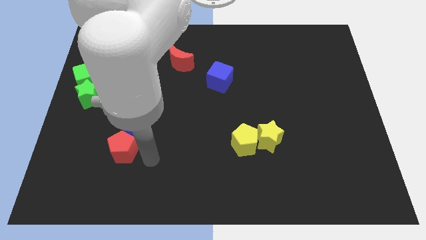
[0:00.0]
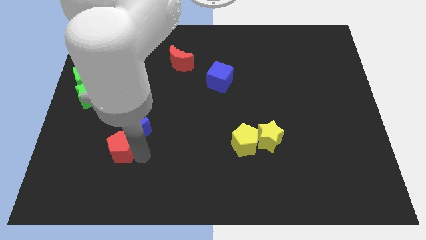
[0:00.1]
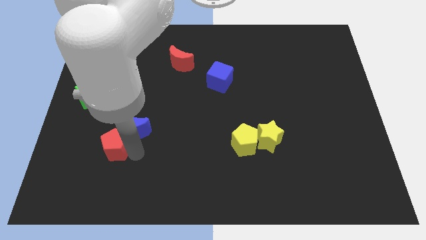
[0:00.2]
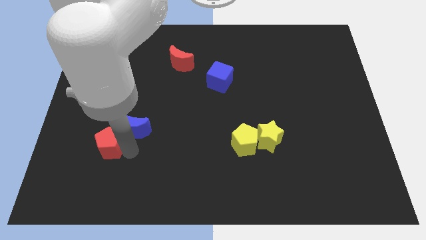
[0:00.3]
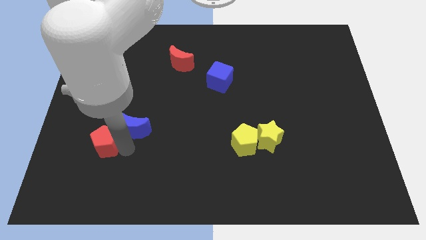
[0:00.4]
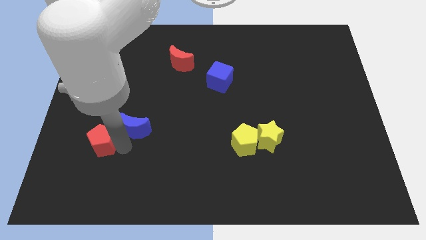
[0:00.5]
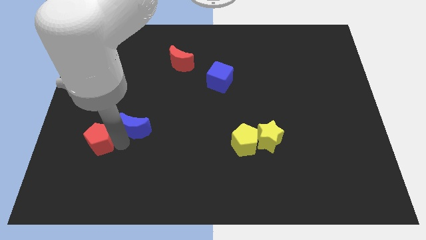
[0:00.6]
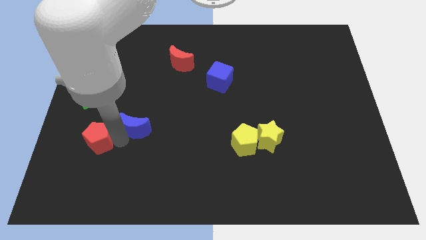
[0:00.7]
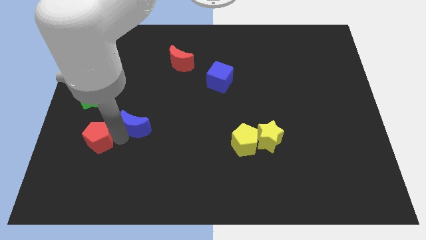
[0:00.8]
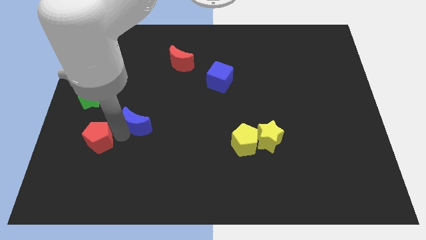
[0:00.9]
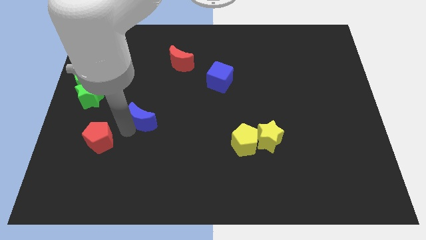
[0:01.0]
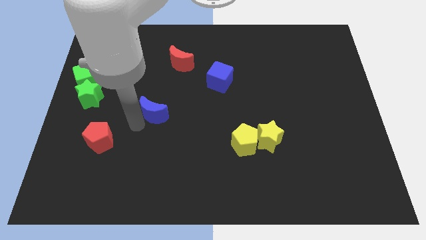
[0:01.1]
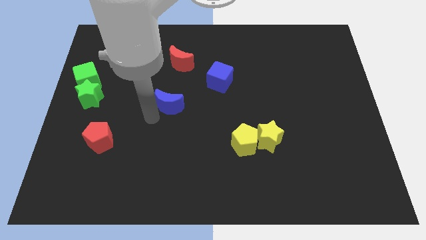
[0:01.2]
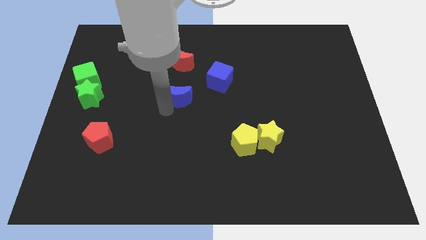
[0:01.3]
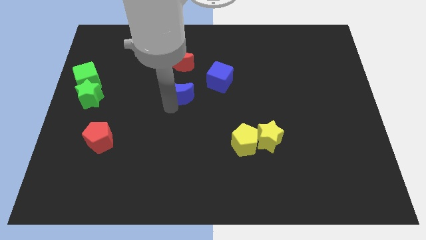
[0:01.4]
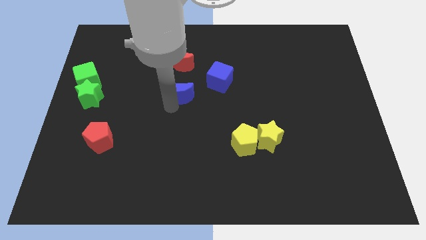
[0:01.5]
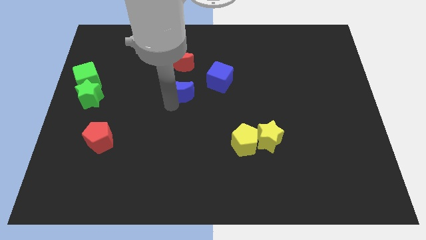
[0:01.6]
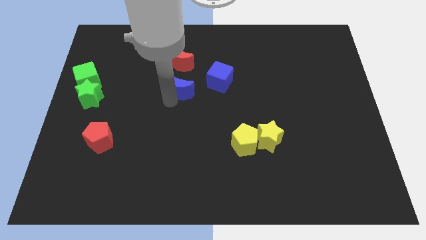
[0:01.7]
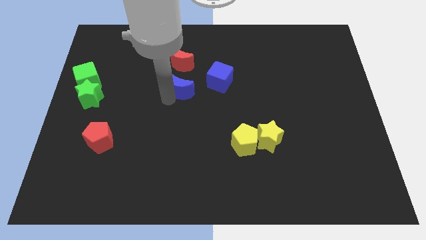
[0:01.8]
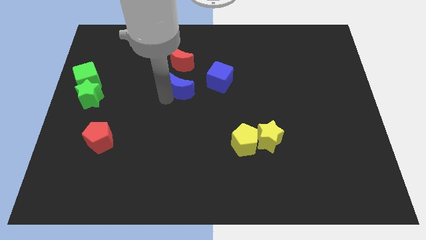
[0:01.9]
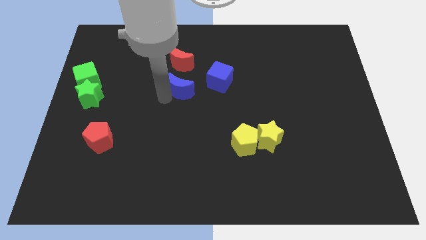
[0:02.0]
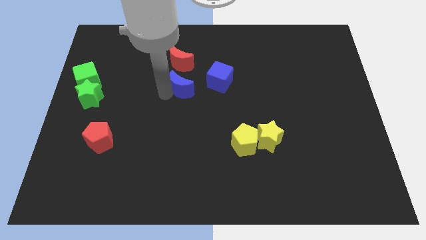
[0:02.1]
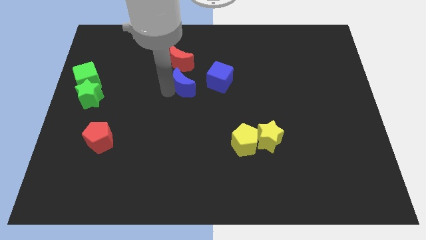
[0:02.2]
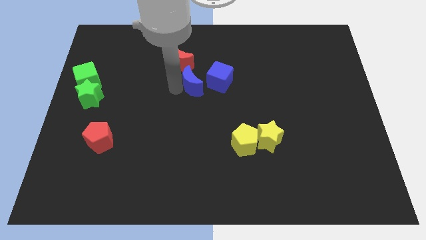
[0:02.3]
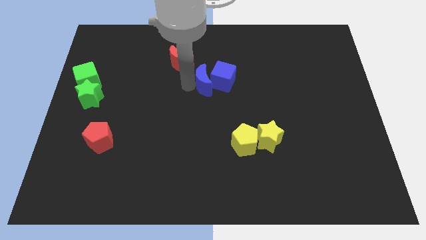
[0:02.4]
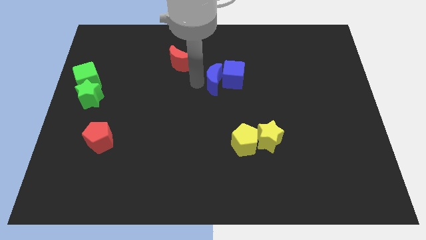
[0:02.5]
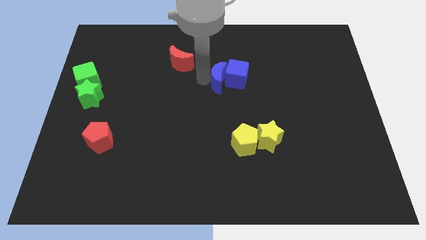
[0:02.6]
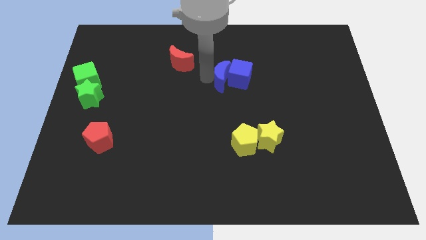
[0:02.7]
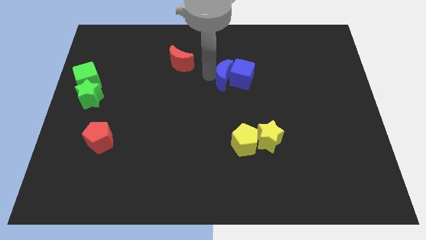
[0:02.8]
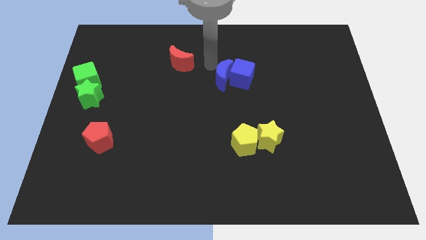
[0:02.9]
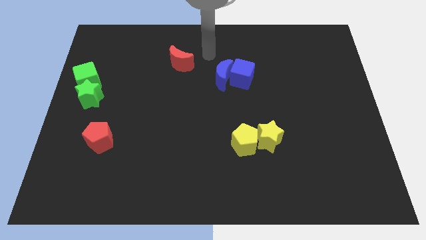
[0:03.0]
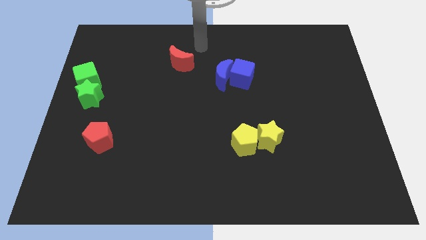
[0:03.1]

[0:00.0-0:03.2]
push the blue moon into the blue cube

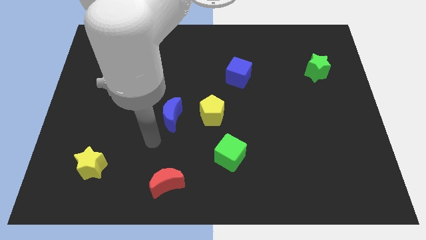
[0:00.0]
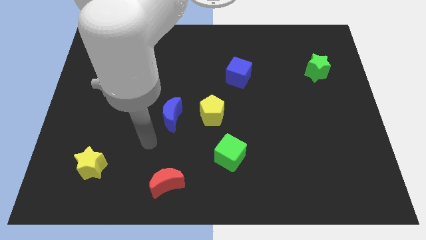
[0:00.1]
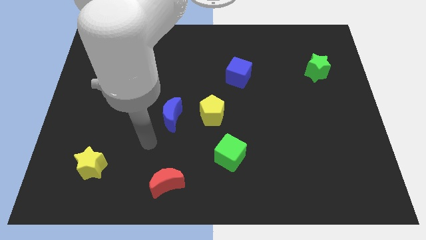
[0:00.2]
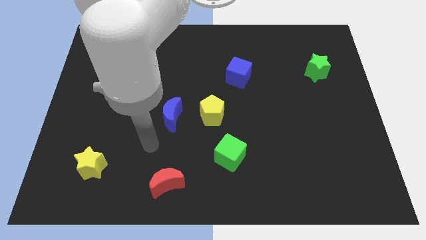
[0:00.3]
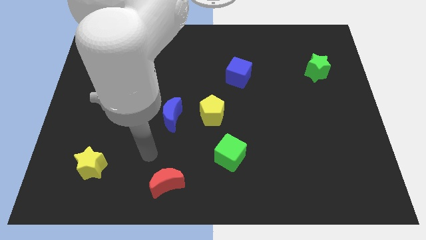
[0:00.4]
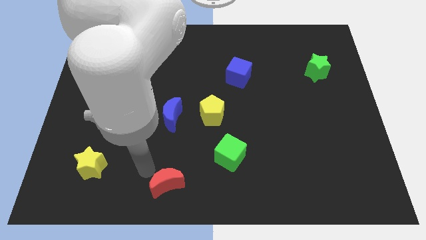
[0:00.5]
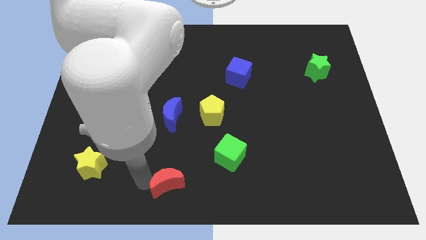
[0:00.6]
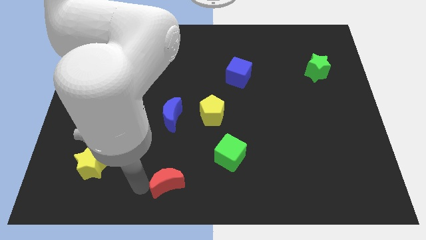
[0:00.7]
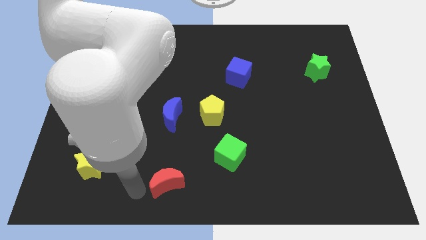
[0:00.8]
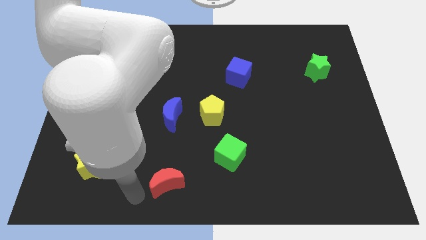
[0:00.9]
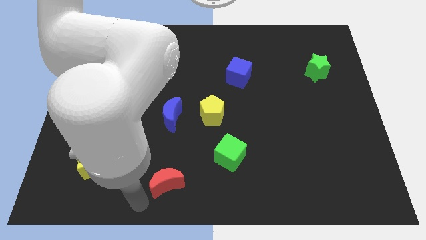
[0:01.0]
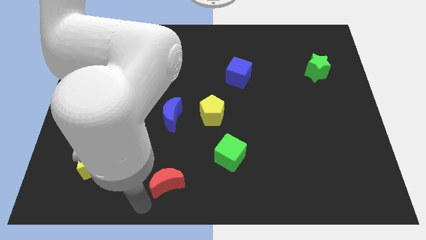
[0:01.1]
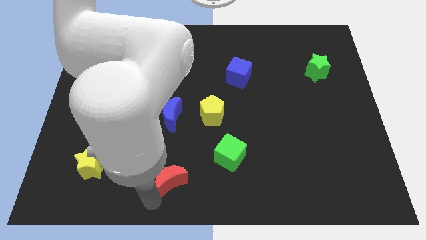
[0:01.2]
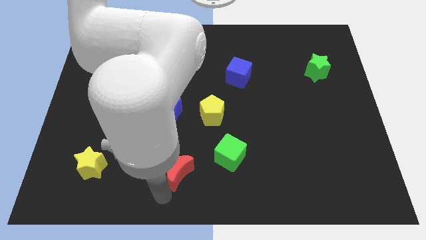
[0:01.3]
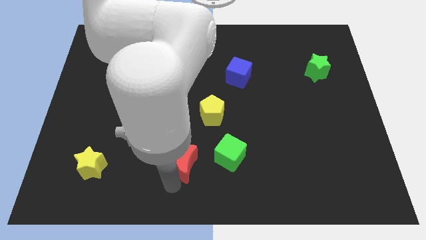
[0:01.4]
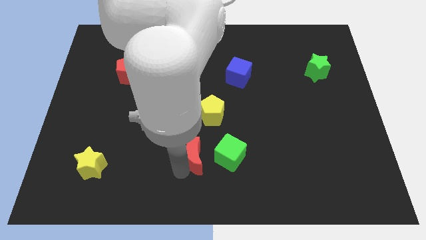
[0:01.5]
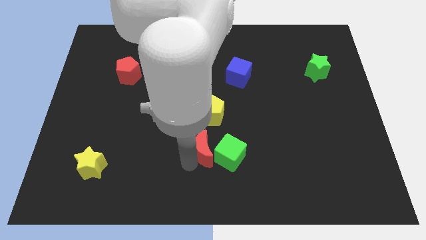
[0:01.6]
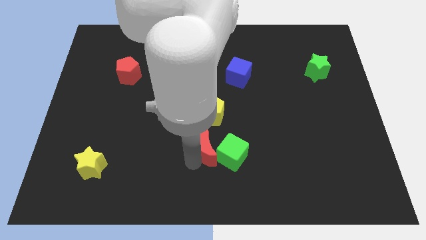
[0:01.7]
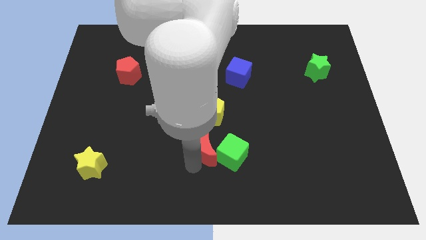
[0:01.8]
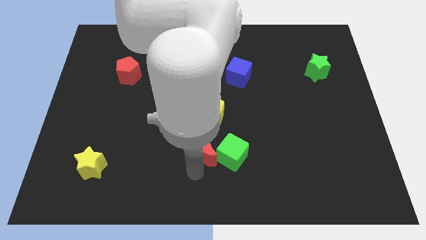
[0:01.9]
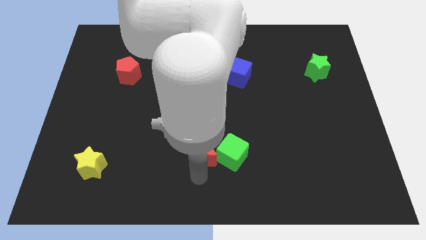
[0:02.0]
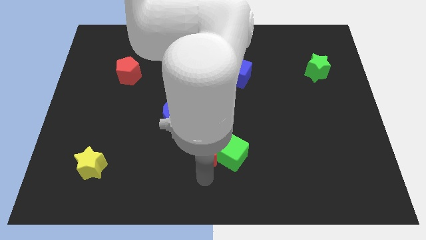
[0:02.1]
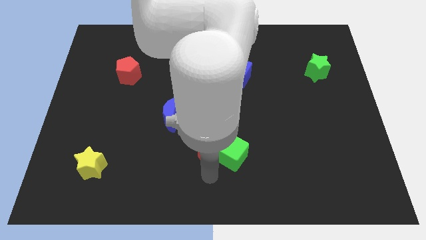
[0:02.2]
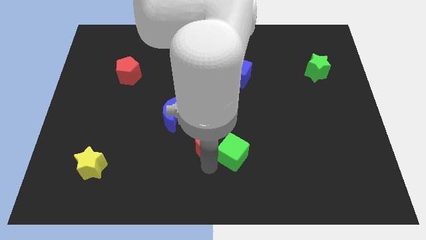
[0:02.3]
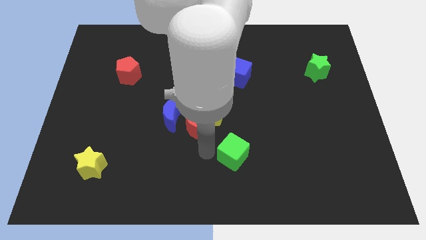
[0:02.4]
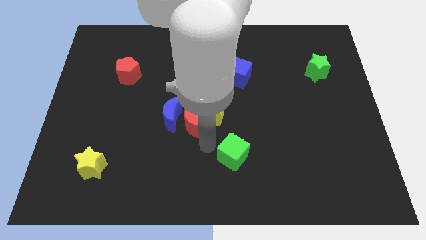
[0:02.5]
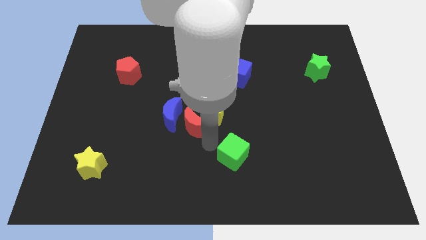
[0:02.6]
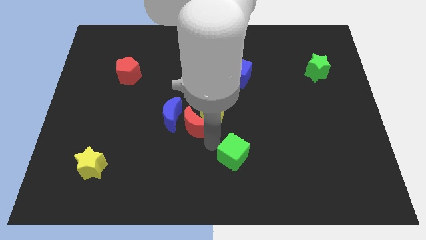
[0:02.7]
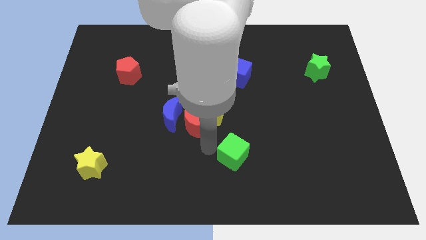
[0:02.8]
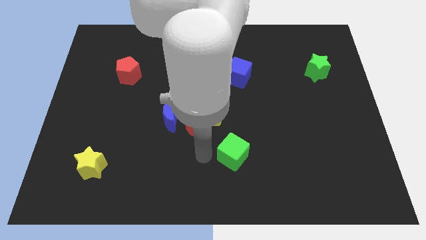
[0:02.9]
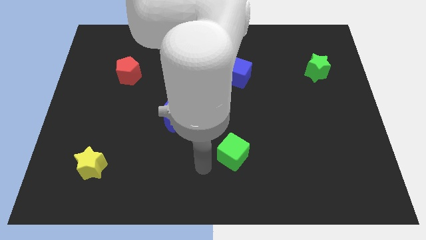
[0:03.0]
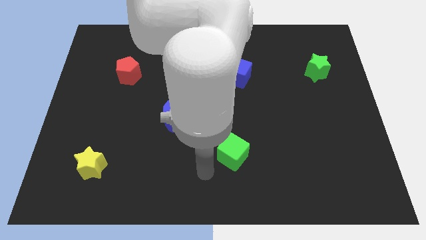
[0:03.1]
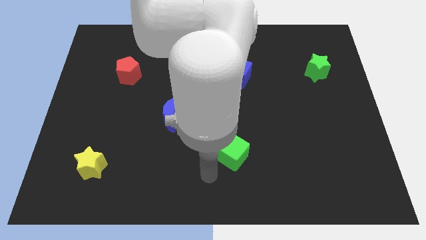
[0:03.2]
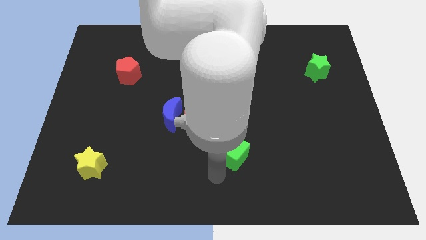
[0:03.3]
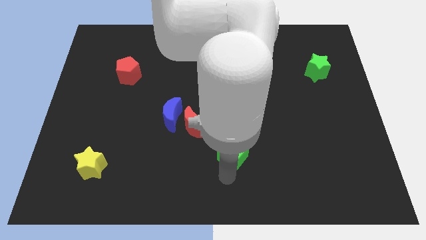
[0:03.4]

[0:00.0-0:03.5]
push the red moon into the yellow pentagon

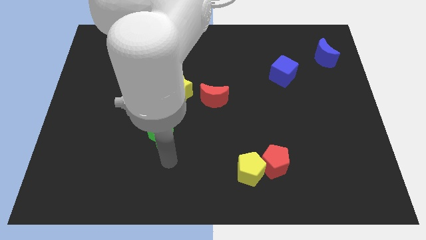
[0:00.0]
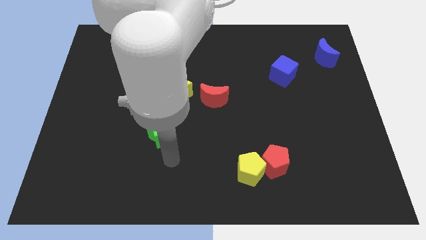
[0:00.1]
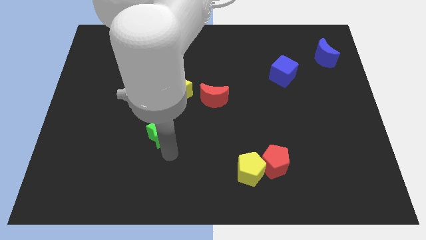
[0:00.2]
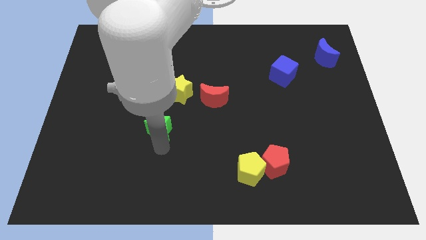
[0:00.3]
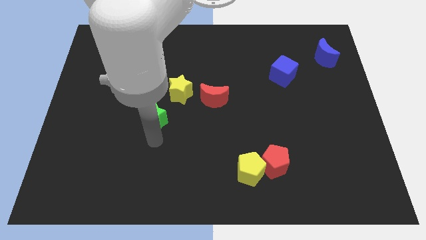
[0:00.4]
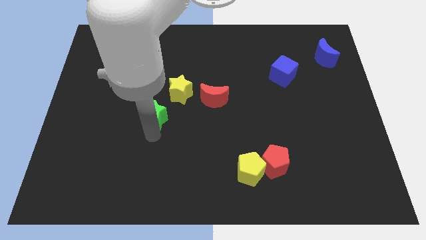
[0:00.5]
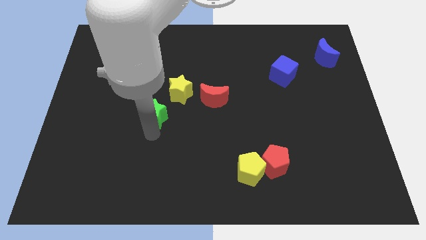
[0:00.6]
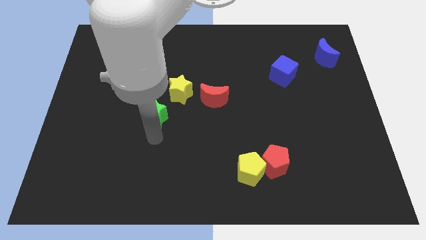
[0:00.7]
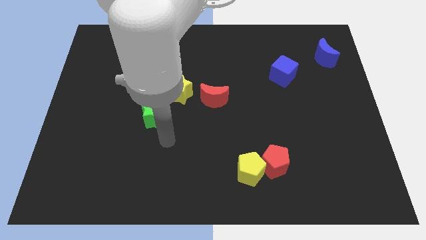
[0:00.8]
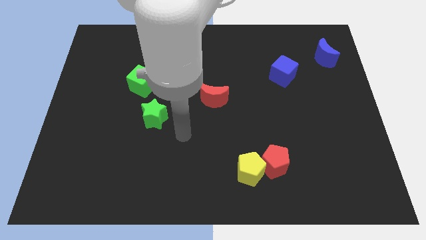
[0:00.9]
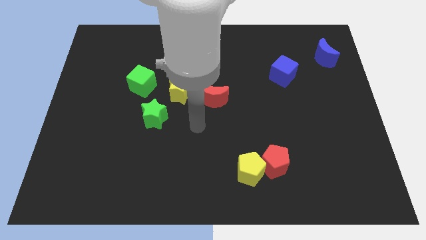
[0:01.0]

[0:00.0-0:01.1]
push green star slightly upwards

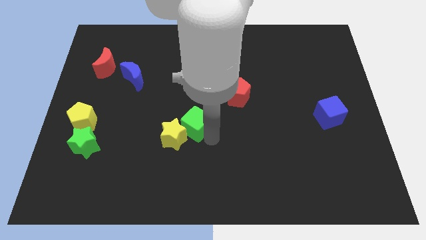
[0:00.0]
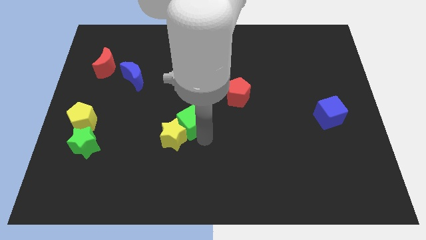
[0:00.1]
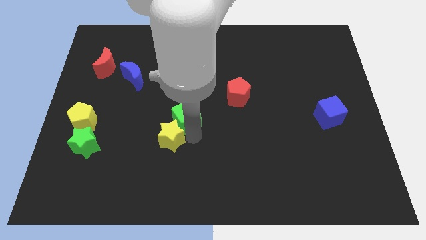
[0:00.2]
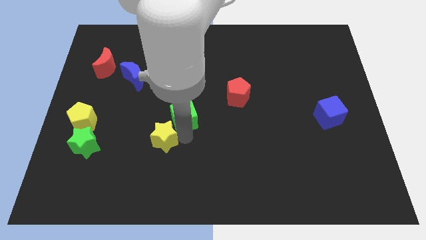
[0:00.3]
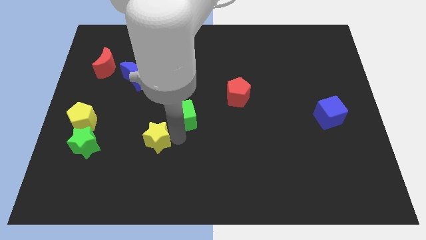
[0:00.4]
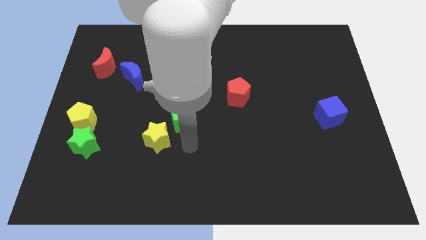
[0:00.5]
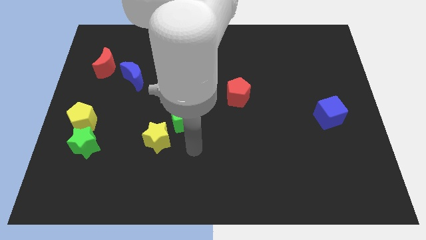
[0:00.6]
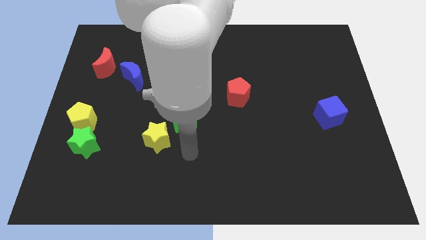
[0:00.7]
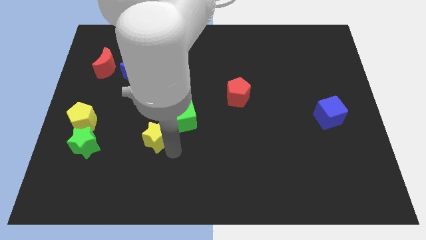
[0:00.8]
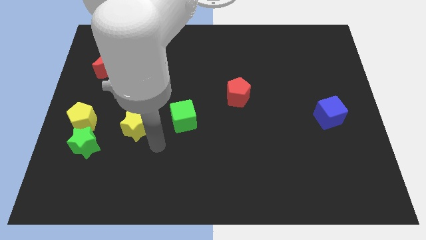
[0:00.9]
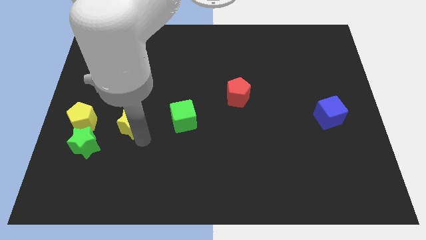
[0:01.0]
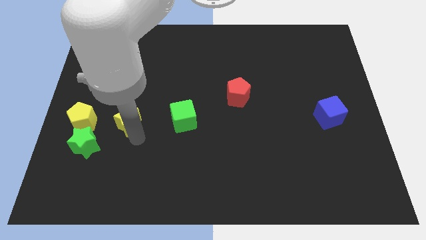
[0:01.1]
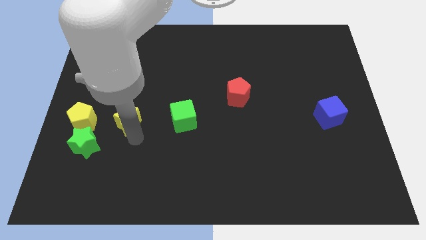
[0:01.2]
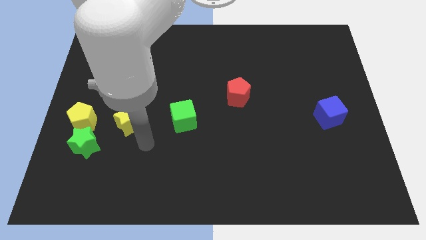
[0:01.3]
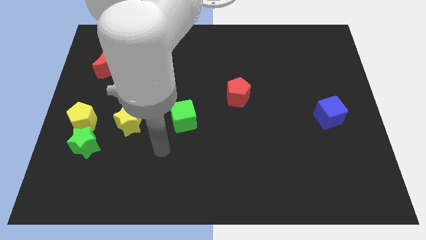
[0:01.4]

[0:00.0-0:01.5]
place the yellow star to the right side of the yellow pentagon
